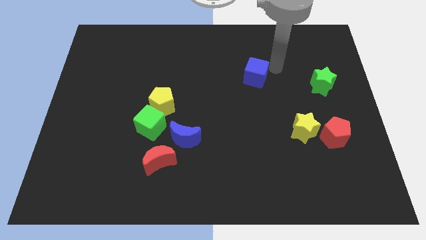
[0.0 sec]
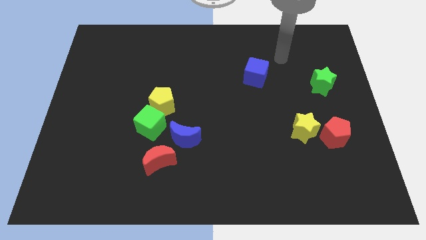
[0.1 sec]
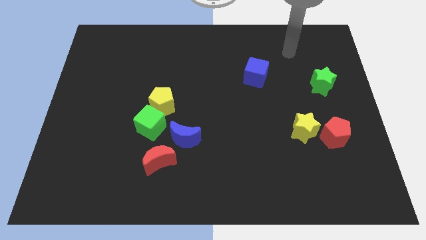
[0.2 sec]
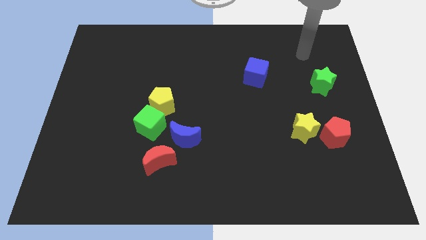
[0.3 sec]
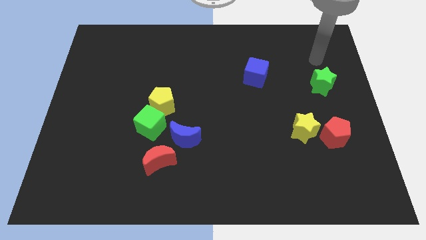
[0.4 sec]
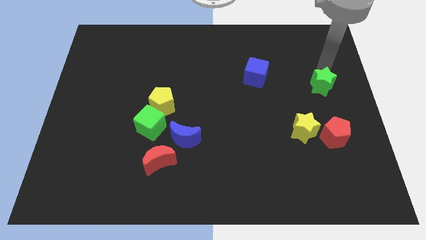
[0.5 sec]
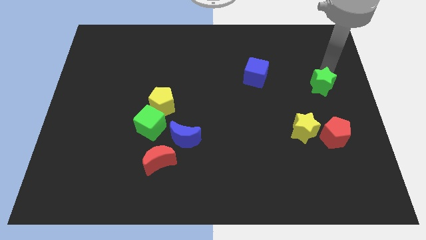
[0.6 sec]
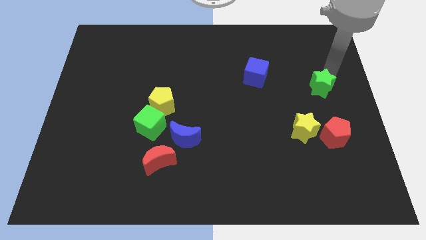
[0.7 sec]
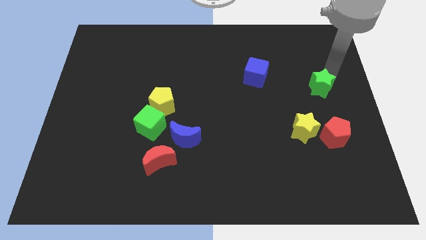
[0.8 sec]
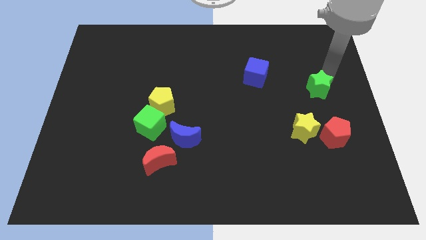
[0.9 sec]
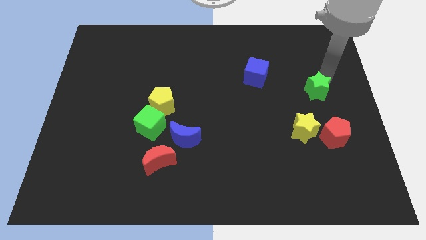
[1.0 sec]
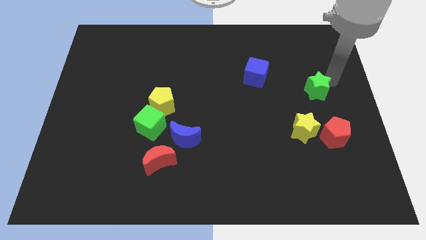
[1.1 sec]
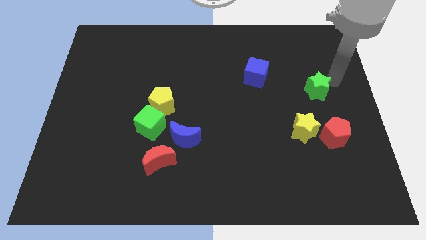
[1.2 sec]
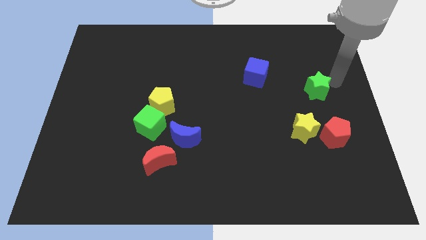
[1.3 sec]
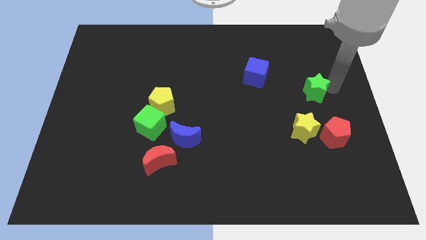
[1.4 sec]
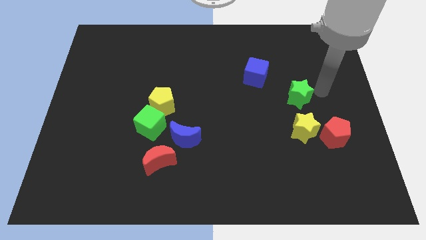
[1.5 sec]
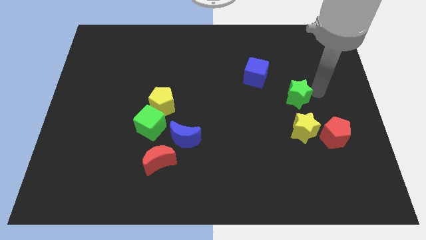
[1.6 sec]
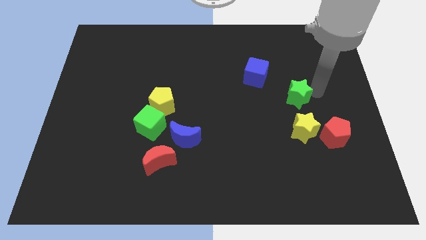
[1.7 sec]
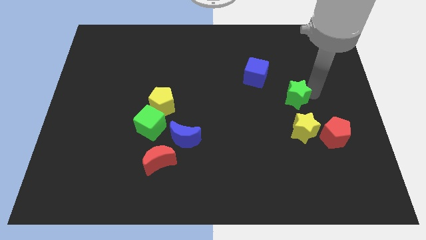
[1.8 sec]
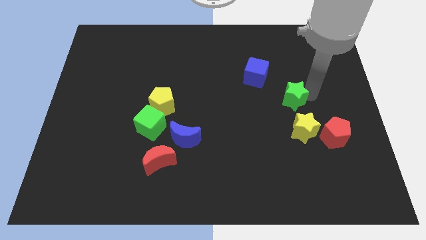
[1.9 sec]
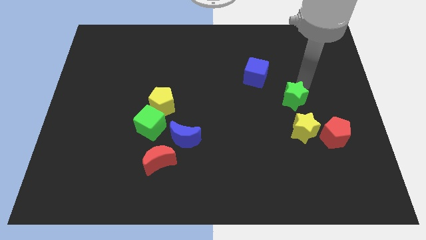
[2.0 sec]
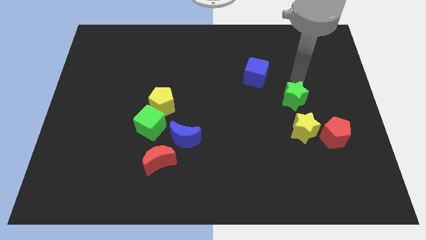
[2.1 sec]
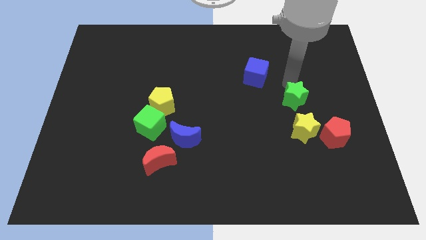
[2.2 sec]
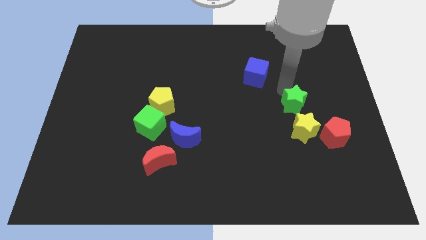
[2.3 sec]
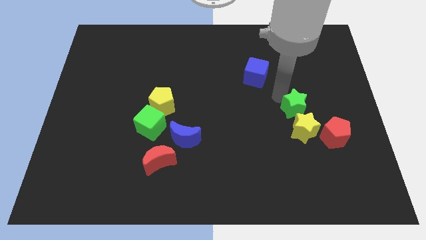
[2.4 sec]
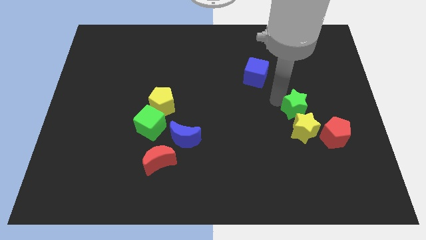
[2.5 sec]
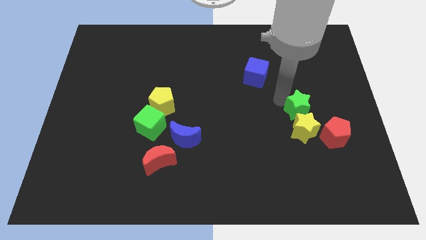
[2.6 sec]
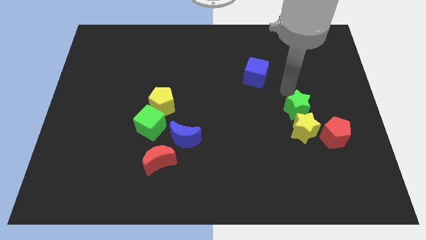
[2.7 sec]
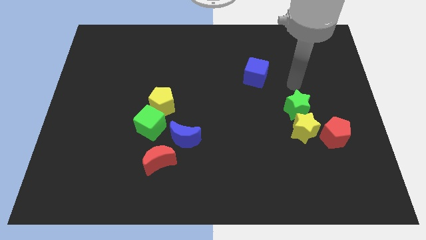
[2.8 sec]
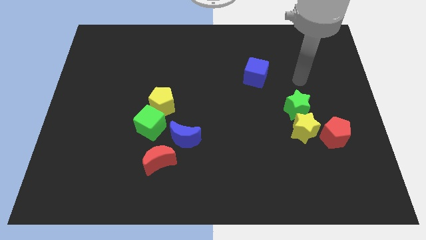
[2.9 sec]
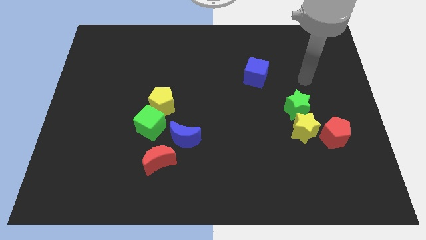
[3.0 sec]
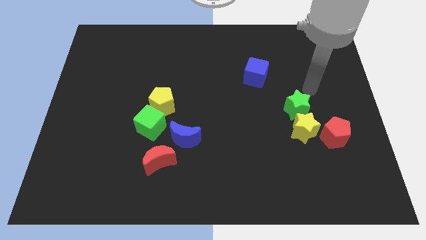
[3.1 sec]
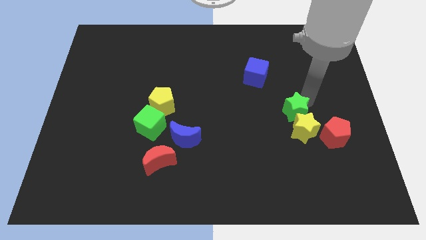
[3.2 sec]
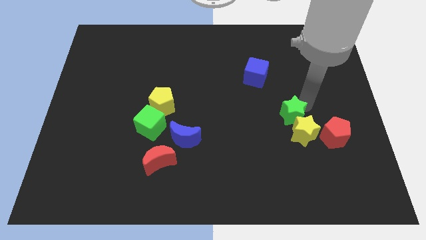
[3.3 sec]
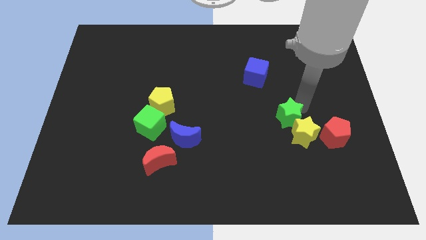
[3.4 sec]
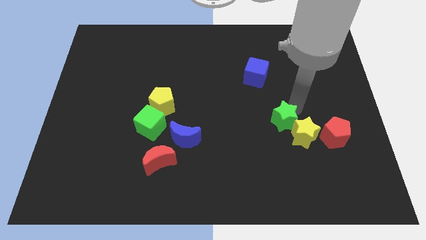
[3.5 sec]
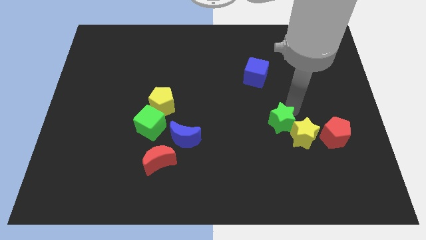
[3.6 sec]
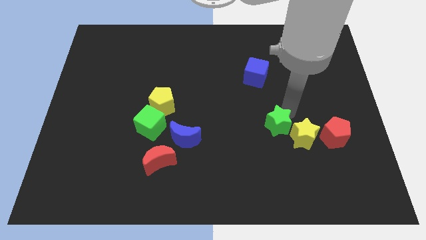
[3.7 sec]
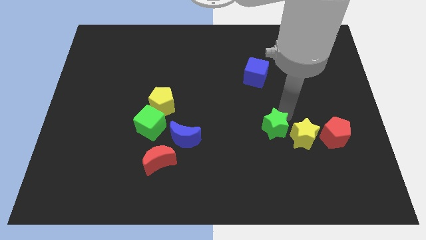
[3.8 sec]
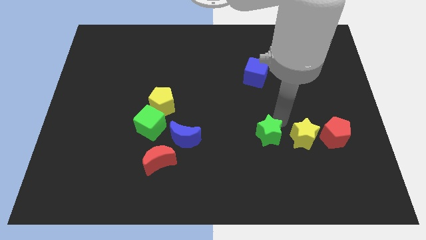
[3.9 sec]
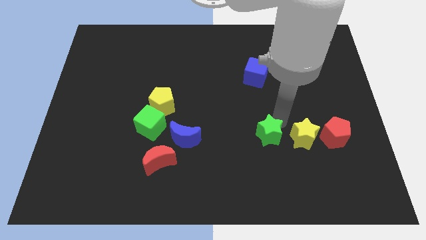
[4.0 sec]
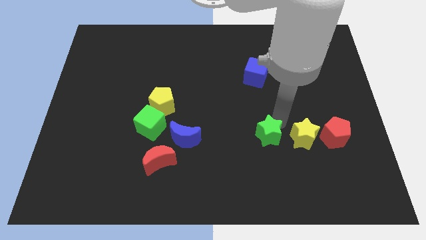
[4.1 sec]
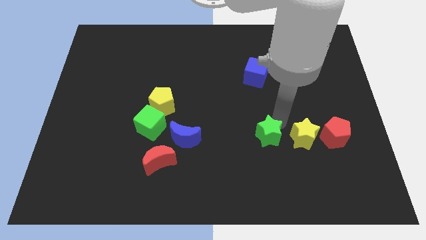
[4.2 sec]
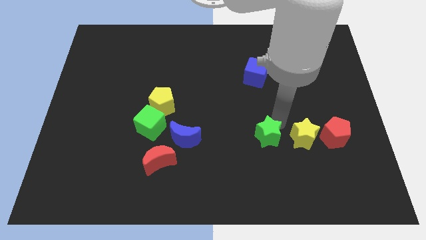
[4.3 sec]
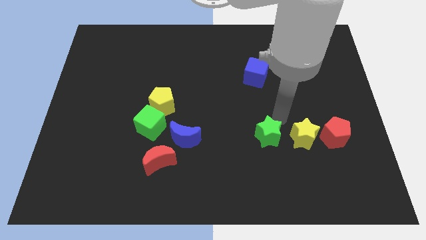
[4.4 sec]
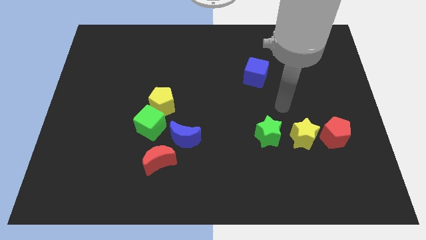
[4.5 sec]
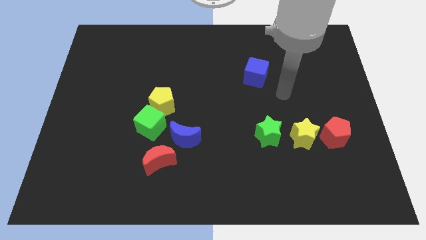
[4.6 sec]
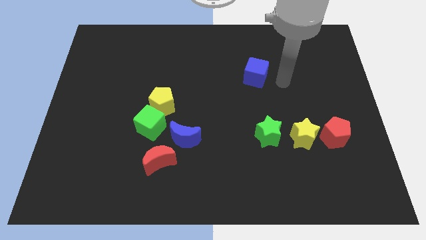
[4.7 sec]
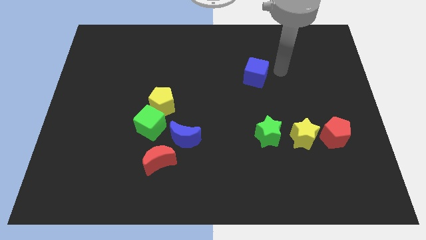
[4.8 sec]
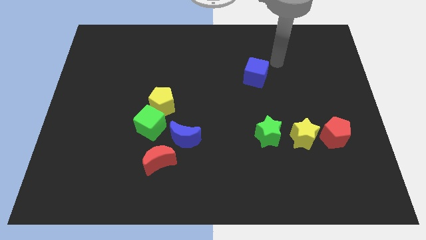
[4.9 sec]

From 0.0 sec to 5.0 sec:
move the green star left to the yellow star

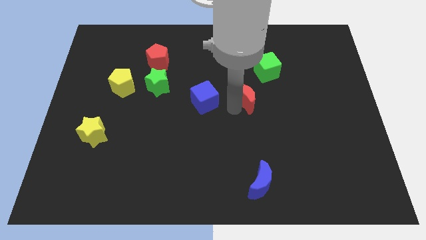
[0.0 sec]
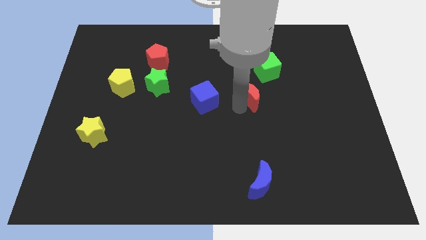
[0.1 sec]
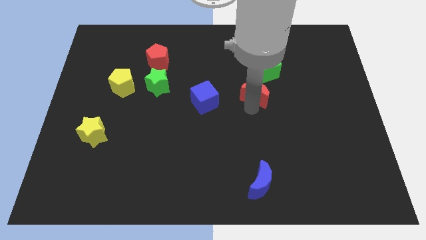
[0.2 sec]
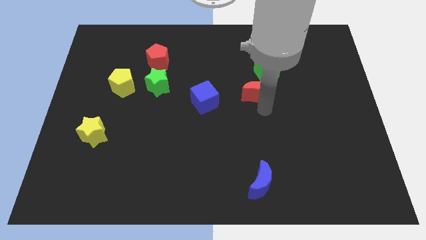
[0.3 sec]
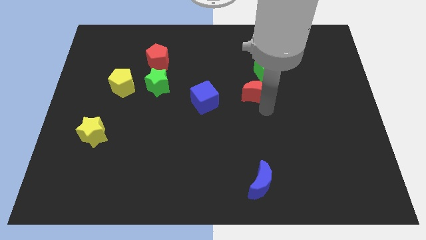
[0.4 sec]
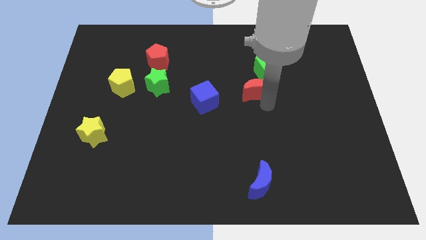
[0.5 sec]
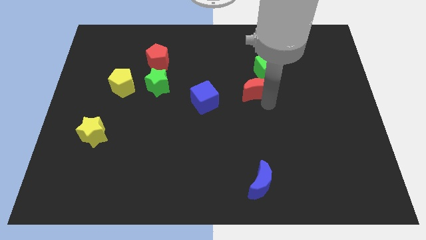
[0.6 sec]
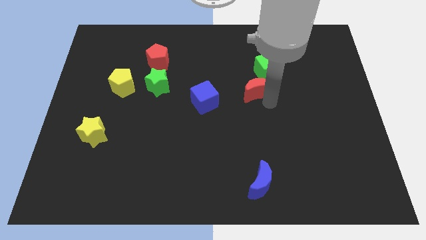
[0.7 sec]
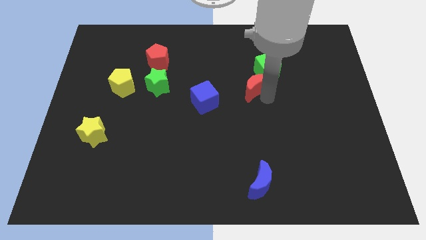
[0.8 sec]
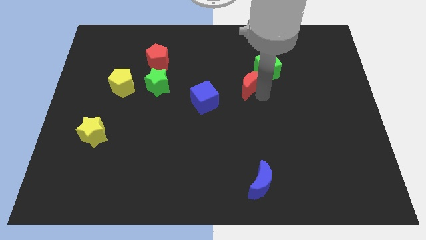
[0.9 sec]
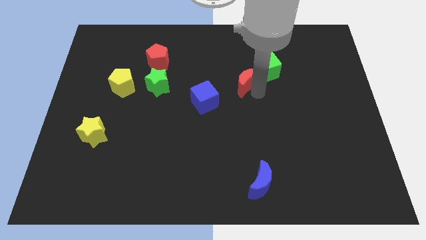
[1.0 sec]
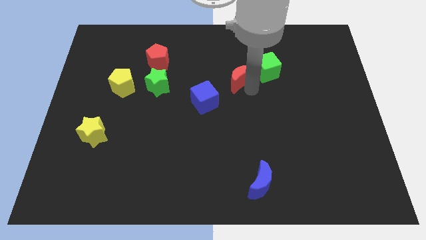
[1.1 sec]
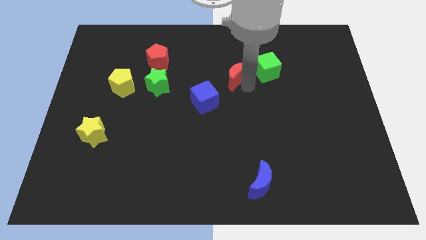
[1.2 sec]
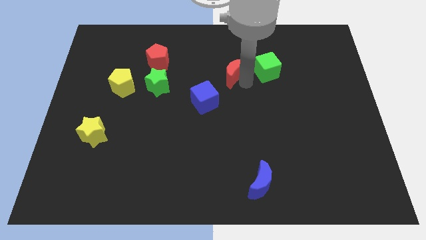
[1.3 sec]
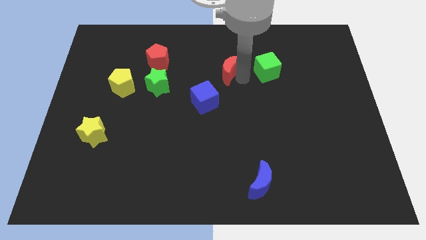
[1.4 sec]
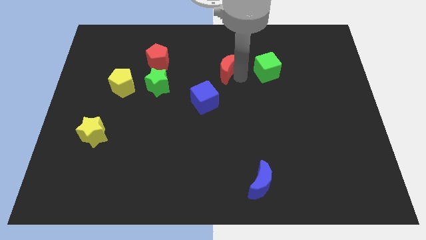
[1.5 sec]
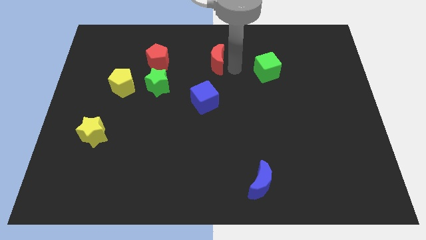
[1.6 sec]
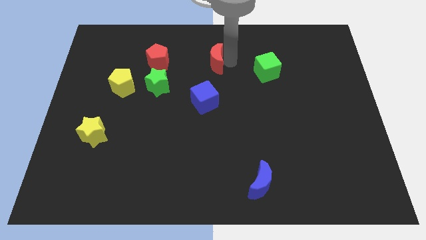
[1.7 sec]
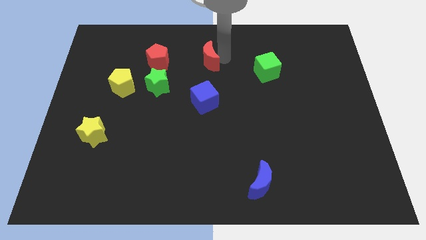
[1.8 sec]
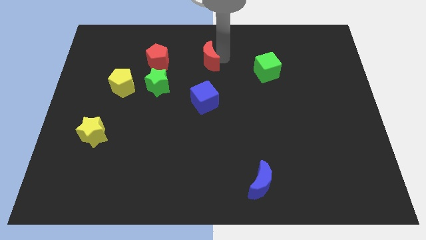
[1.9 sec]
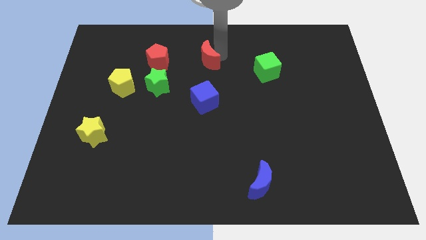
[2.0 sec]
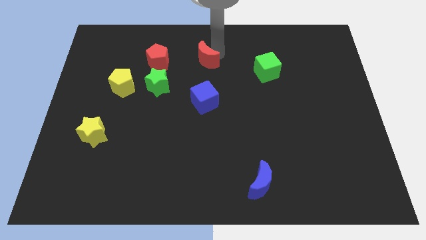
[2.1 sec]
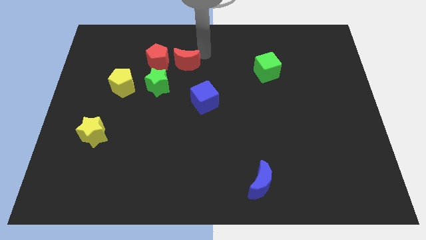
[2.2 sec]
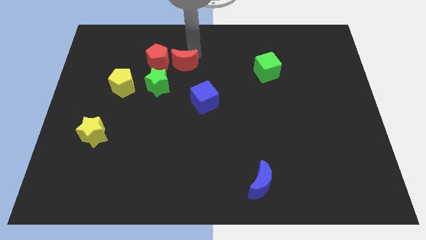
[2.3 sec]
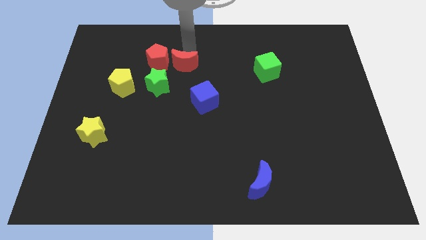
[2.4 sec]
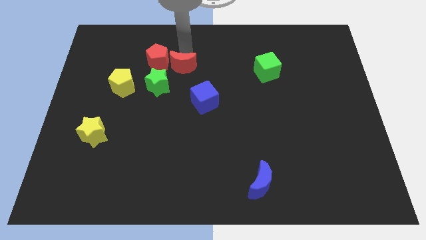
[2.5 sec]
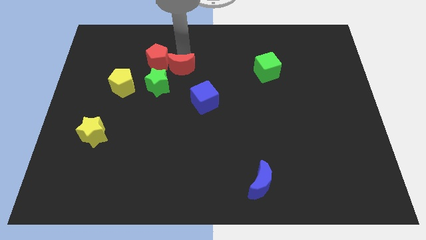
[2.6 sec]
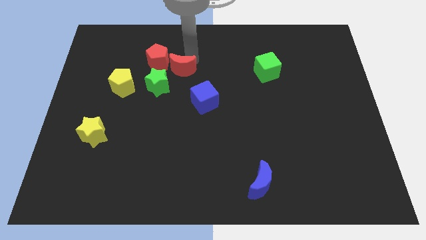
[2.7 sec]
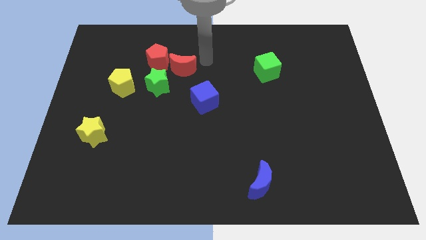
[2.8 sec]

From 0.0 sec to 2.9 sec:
place the red crescent to the right of the red pentagon

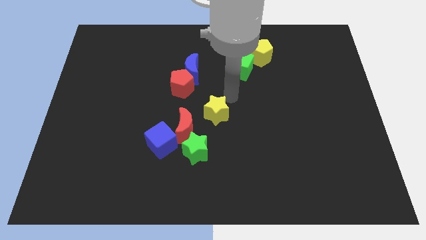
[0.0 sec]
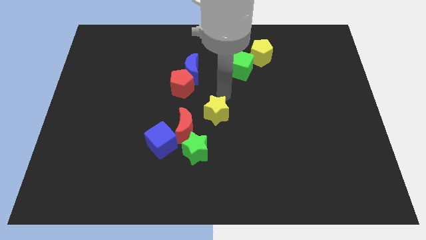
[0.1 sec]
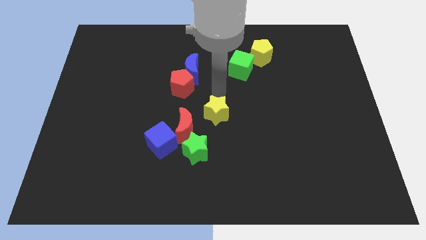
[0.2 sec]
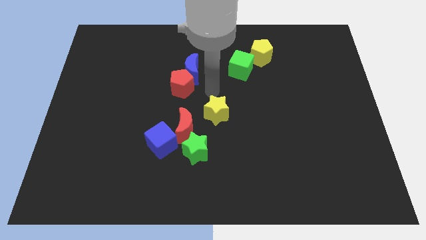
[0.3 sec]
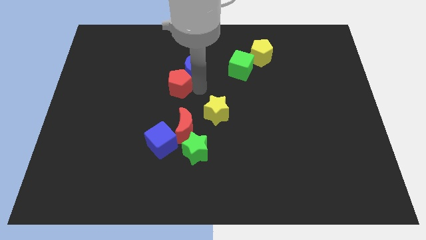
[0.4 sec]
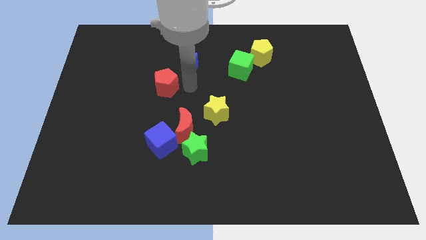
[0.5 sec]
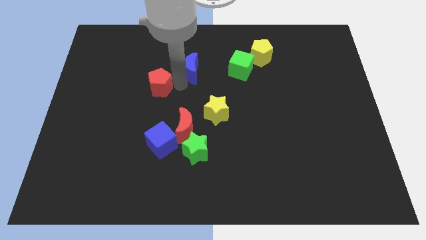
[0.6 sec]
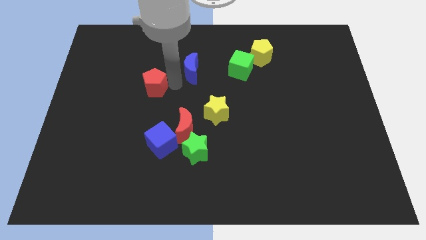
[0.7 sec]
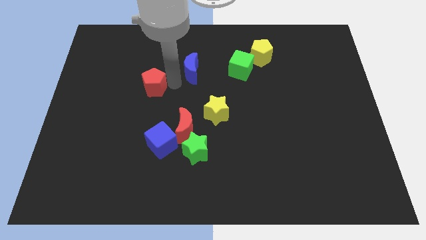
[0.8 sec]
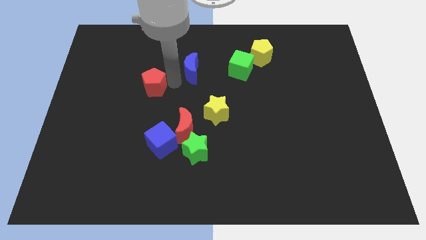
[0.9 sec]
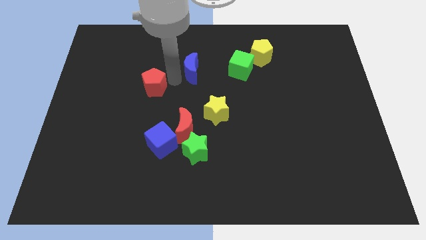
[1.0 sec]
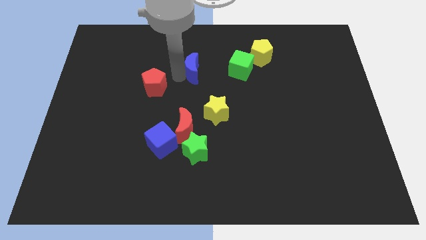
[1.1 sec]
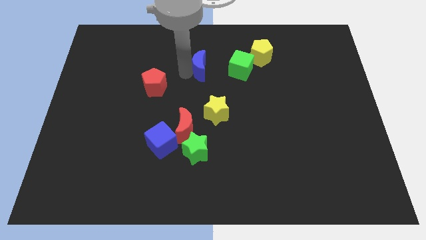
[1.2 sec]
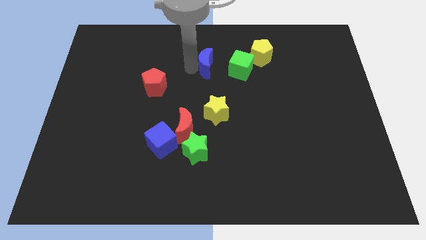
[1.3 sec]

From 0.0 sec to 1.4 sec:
separate the red pentagon and blue crescent from each other
